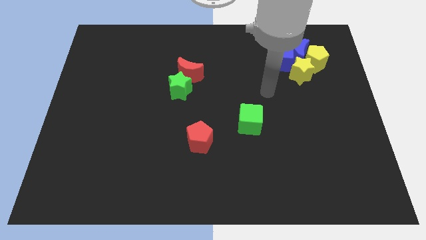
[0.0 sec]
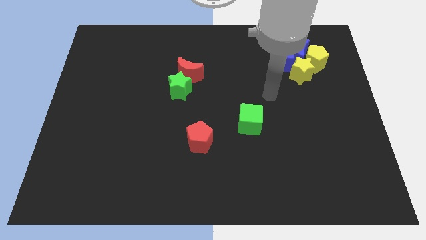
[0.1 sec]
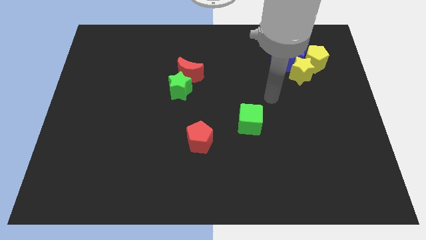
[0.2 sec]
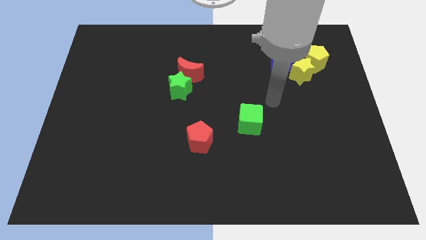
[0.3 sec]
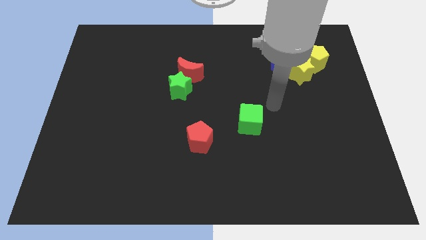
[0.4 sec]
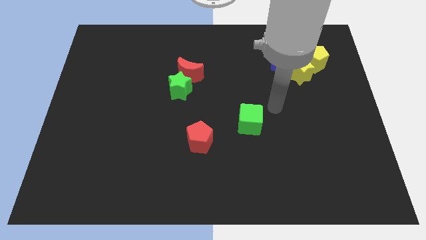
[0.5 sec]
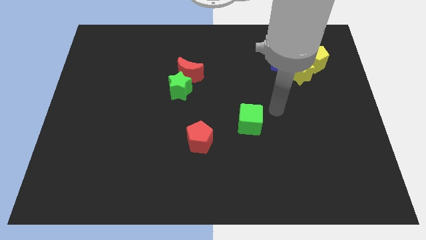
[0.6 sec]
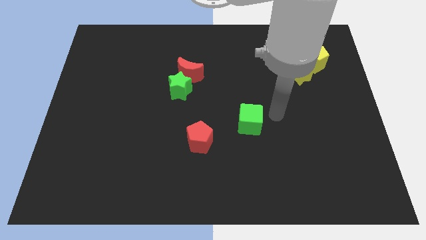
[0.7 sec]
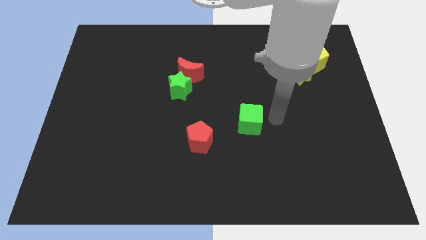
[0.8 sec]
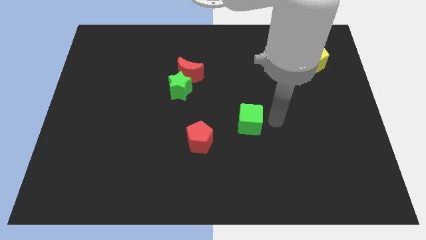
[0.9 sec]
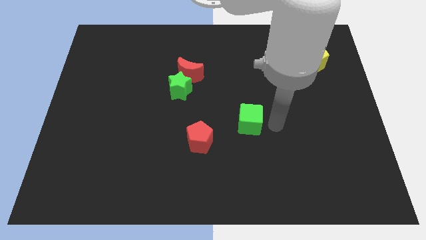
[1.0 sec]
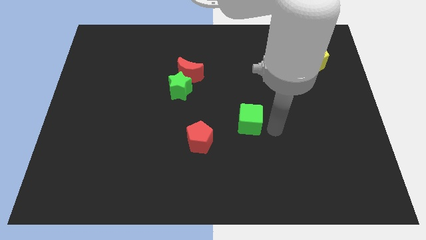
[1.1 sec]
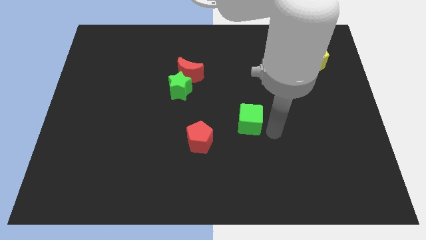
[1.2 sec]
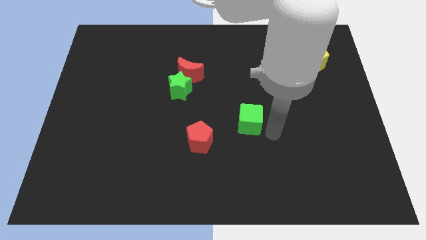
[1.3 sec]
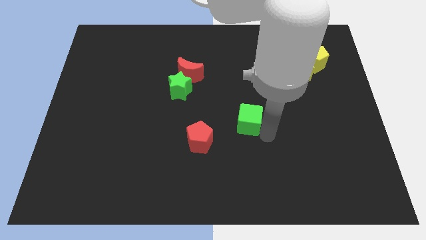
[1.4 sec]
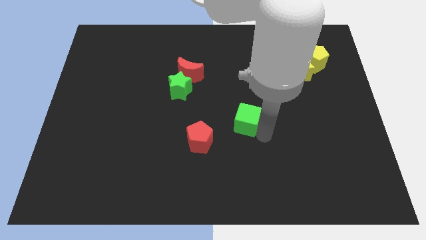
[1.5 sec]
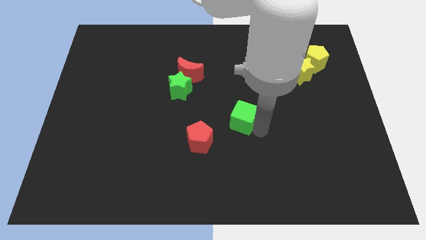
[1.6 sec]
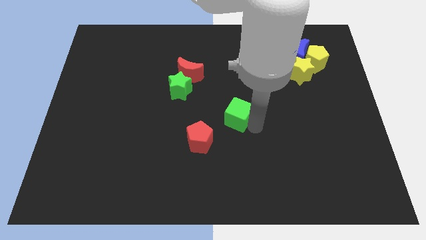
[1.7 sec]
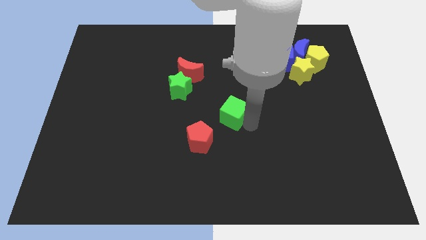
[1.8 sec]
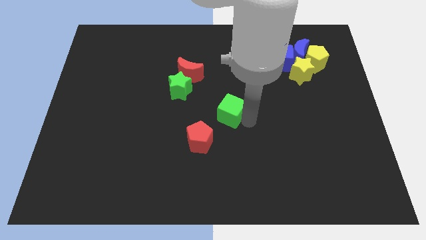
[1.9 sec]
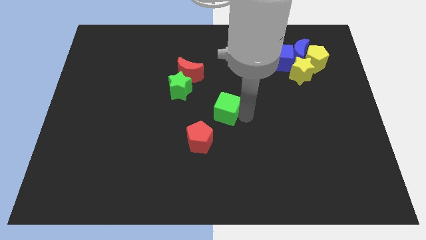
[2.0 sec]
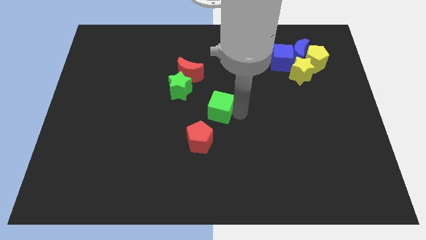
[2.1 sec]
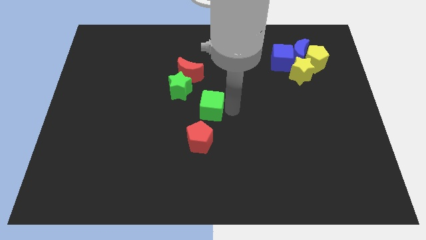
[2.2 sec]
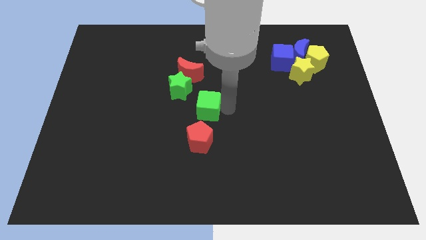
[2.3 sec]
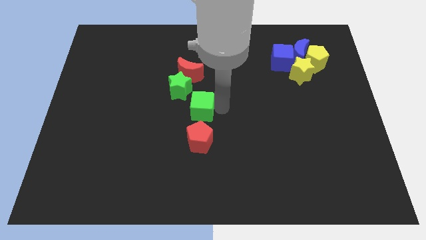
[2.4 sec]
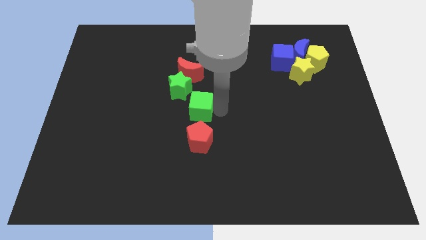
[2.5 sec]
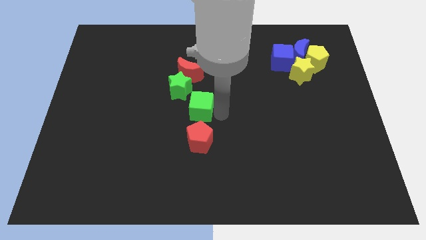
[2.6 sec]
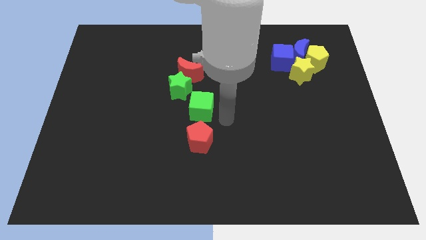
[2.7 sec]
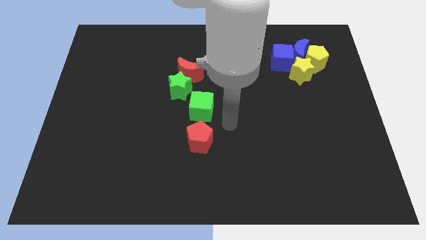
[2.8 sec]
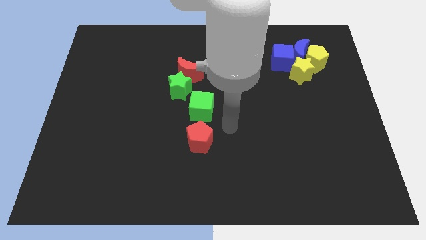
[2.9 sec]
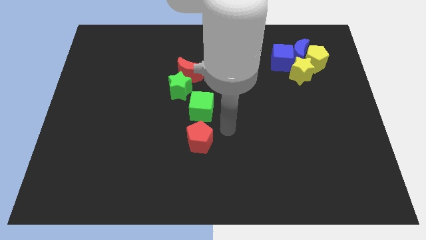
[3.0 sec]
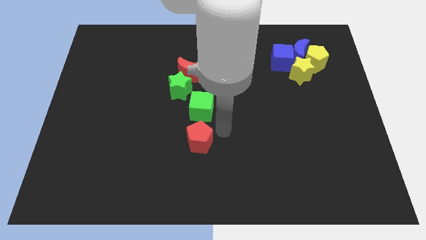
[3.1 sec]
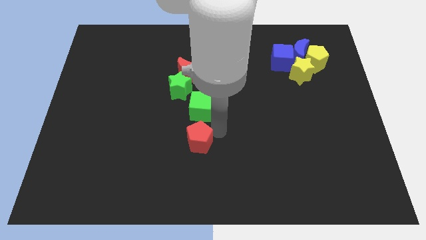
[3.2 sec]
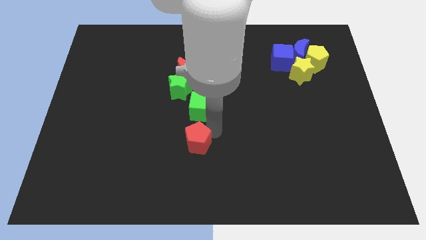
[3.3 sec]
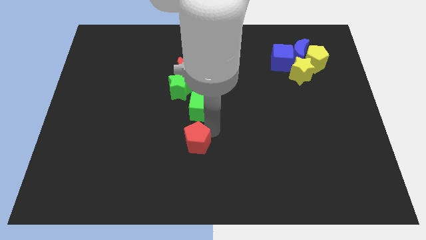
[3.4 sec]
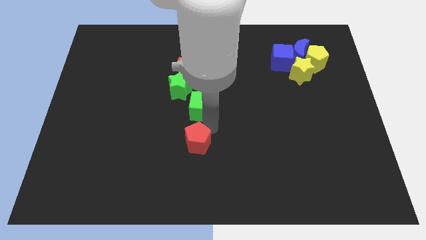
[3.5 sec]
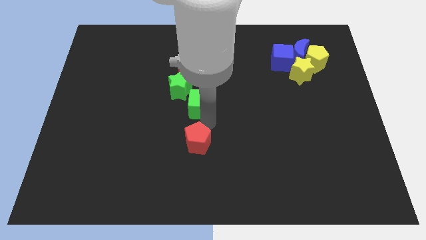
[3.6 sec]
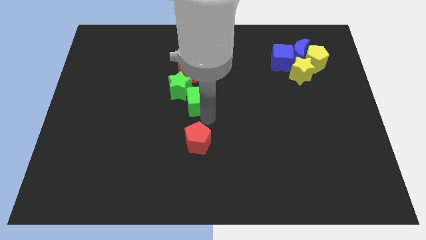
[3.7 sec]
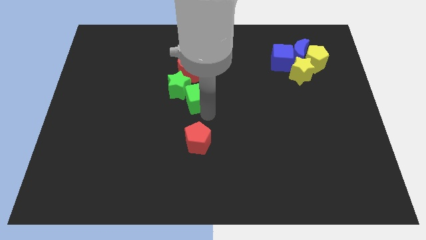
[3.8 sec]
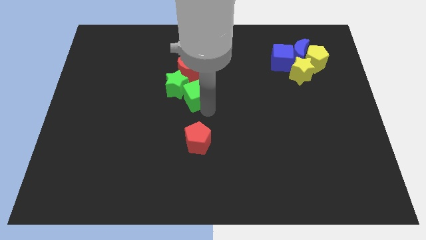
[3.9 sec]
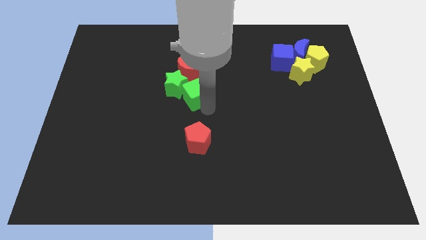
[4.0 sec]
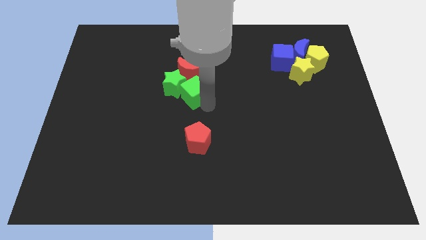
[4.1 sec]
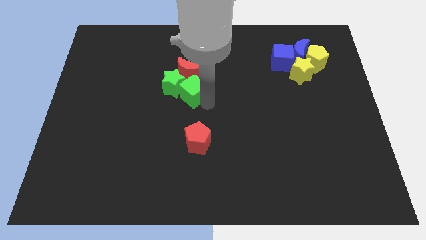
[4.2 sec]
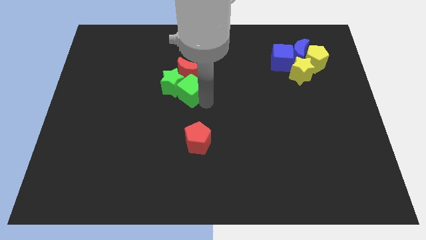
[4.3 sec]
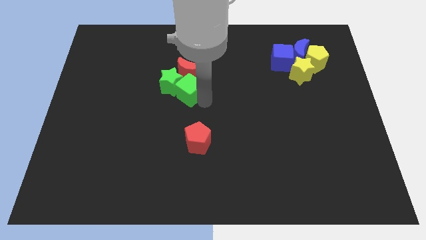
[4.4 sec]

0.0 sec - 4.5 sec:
push green blocks below to the red crescent

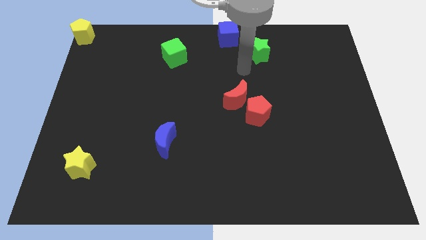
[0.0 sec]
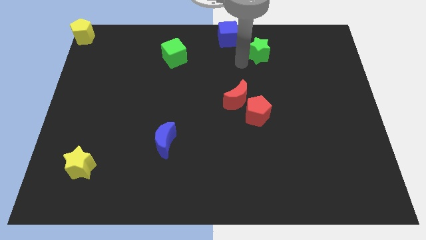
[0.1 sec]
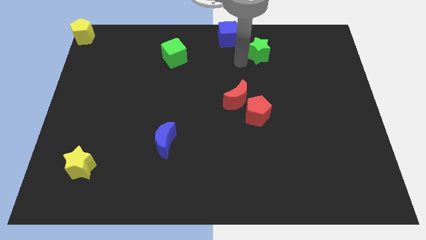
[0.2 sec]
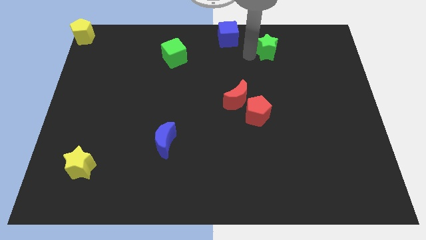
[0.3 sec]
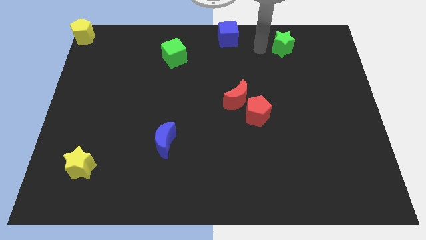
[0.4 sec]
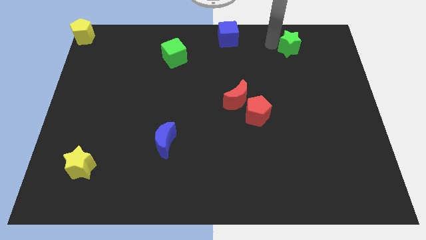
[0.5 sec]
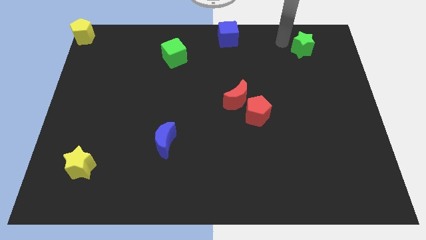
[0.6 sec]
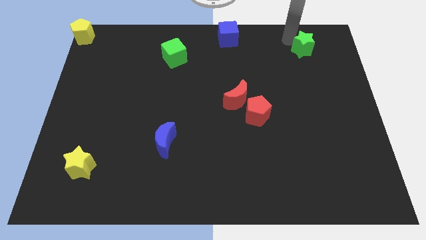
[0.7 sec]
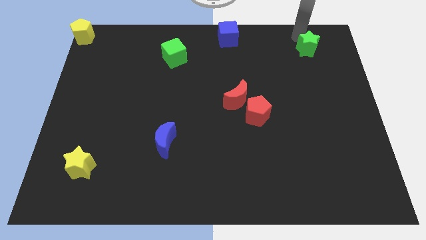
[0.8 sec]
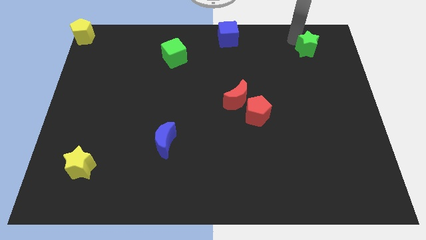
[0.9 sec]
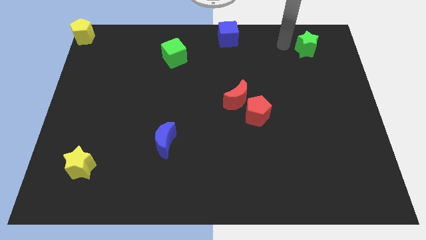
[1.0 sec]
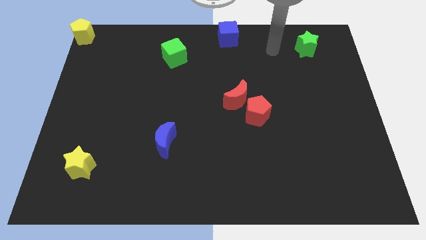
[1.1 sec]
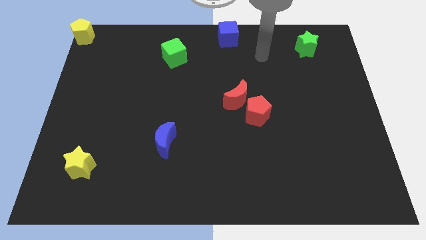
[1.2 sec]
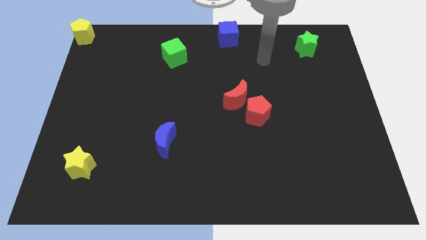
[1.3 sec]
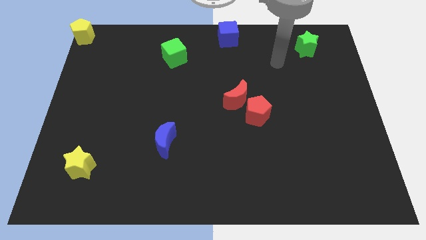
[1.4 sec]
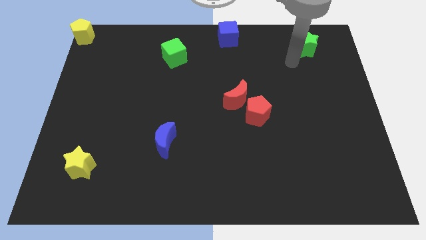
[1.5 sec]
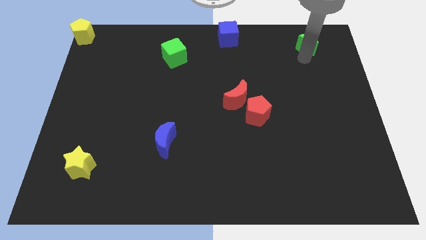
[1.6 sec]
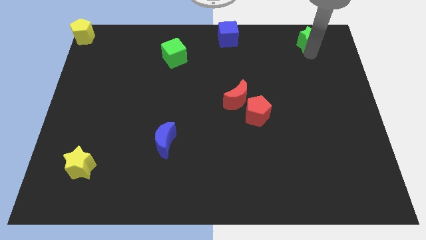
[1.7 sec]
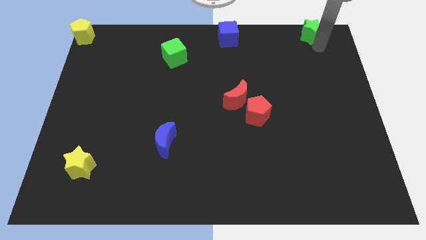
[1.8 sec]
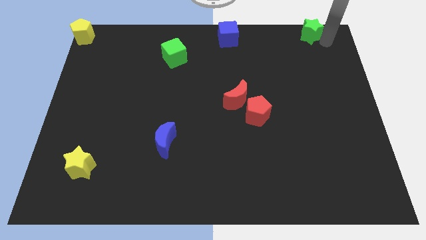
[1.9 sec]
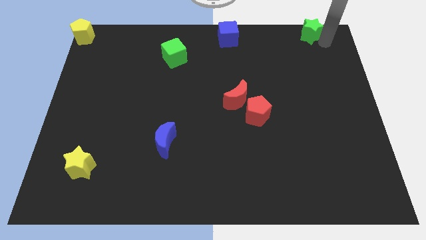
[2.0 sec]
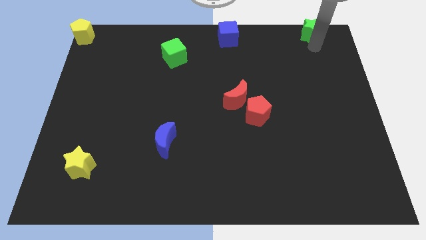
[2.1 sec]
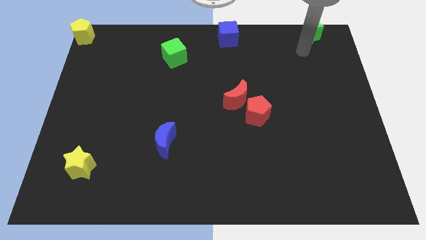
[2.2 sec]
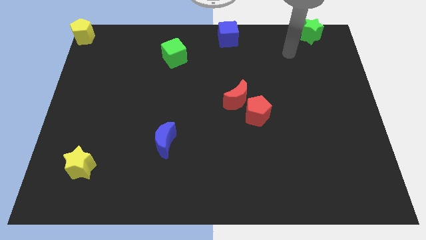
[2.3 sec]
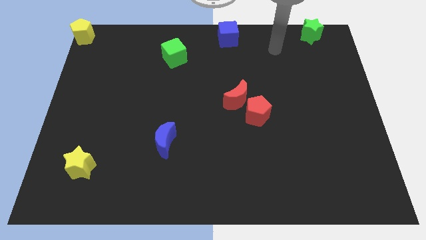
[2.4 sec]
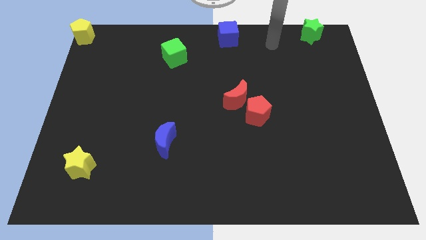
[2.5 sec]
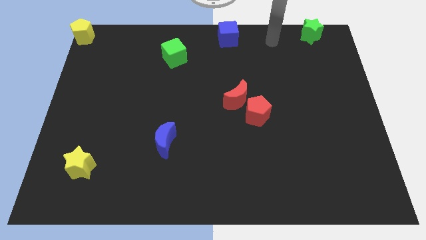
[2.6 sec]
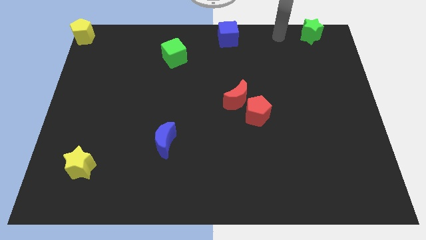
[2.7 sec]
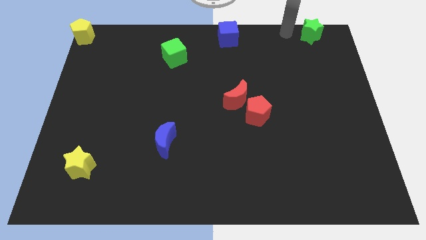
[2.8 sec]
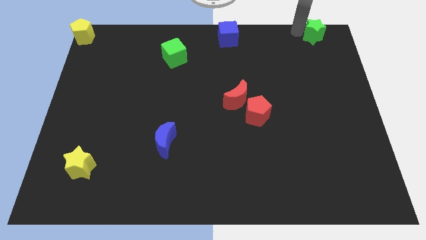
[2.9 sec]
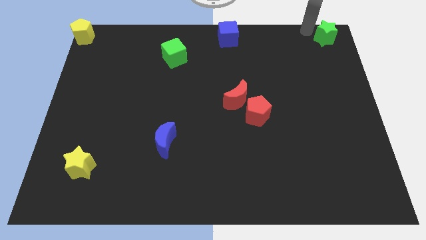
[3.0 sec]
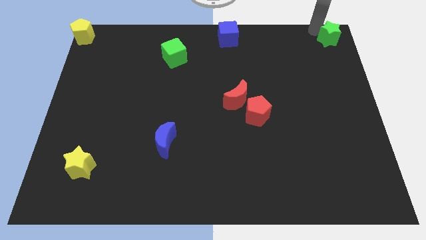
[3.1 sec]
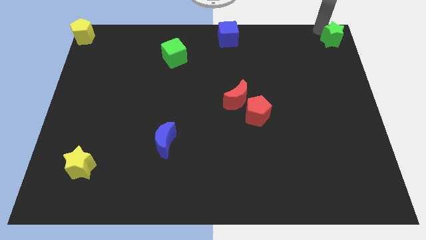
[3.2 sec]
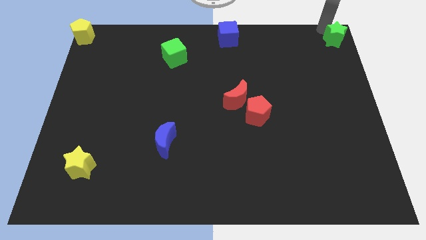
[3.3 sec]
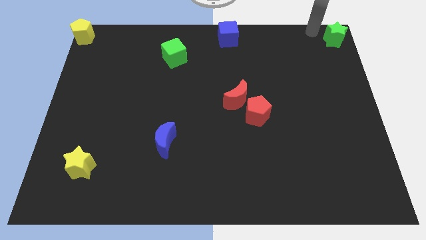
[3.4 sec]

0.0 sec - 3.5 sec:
place green star towards top right corner of the board

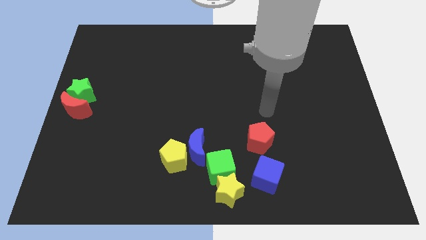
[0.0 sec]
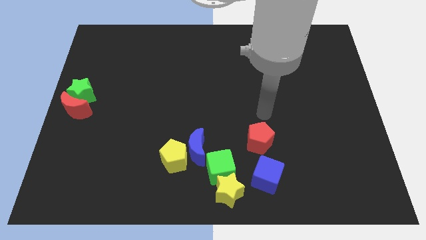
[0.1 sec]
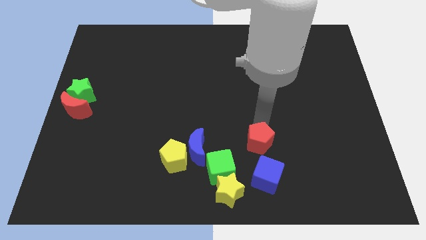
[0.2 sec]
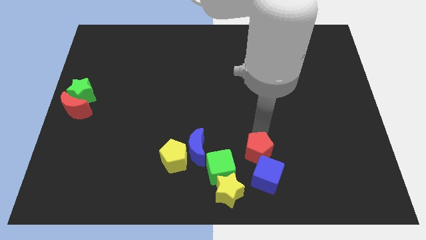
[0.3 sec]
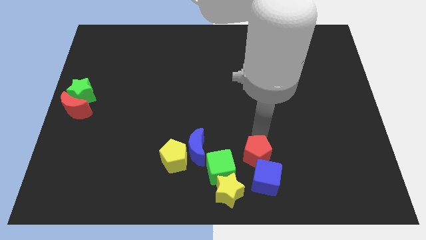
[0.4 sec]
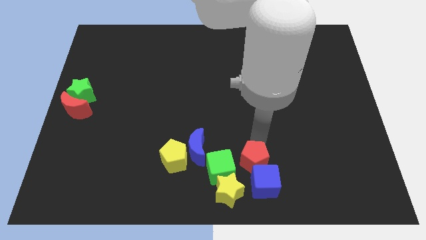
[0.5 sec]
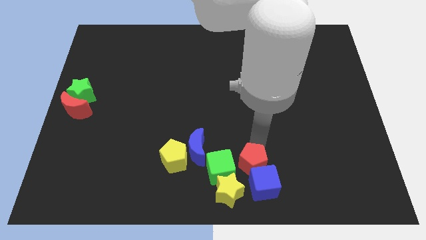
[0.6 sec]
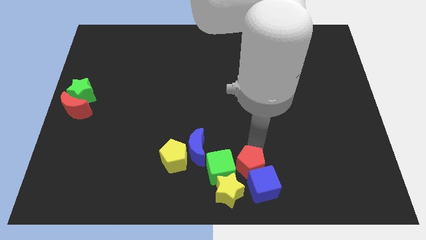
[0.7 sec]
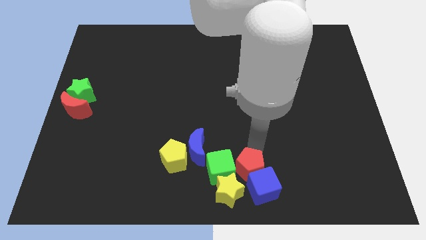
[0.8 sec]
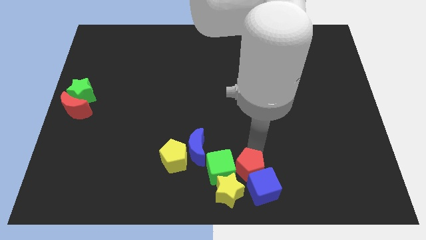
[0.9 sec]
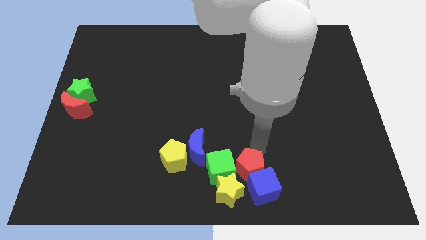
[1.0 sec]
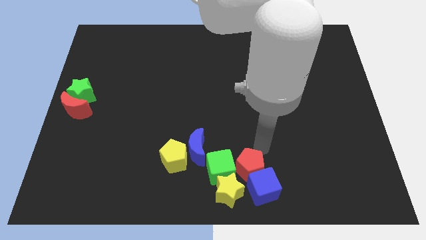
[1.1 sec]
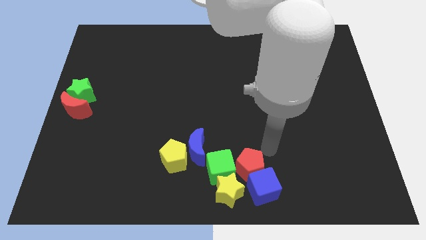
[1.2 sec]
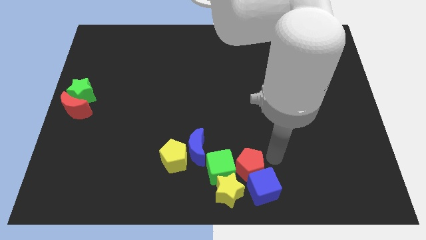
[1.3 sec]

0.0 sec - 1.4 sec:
push the red pentagon into the blue cube
